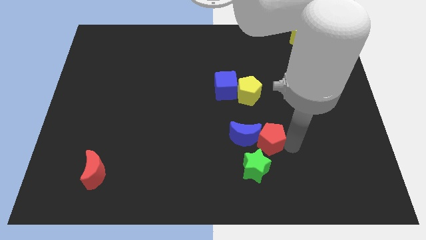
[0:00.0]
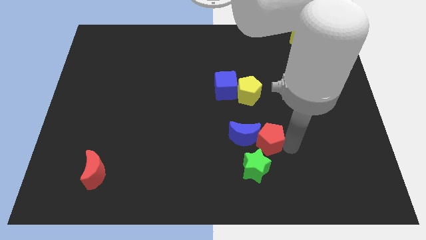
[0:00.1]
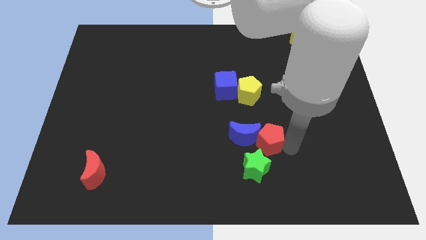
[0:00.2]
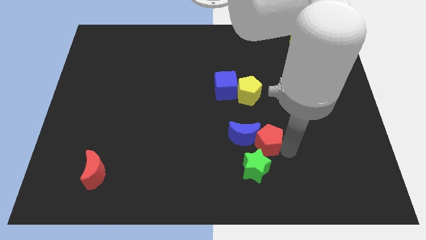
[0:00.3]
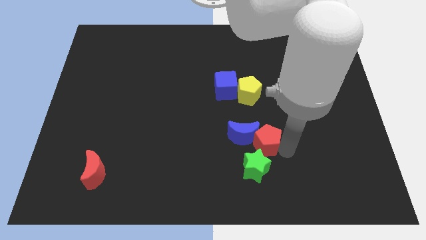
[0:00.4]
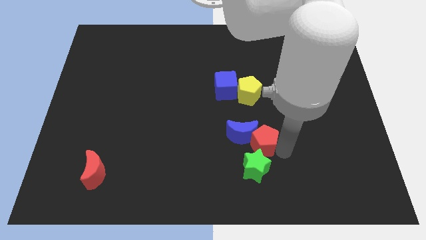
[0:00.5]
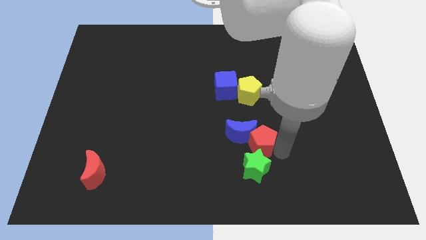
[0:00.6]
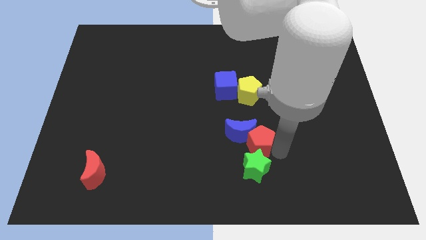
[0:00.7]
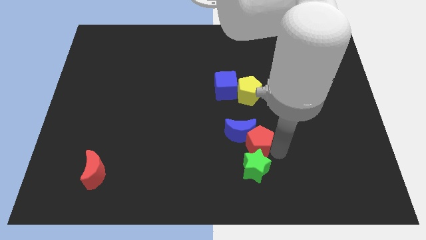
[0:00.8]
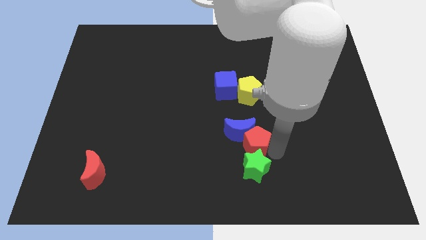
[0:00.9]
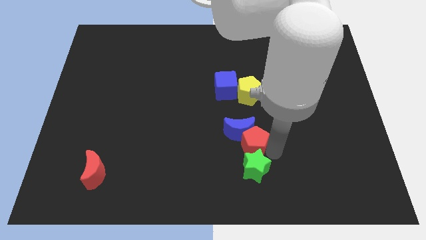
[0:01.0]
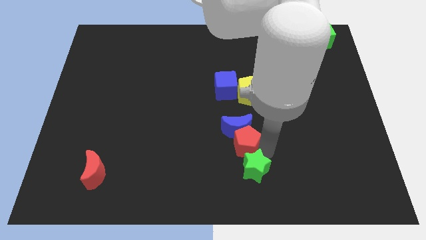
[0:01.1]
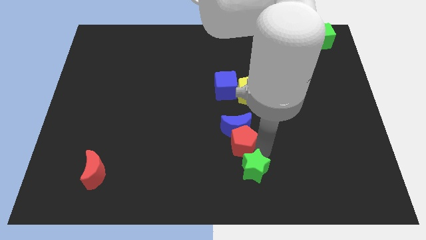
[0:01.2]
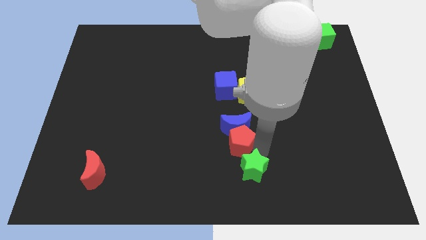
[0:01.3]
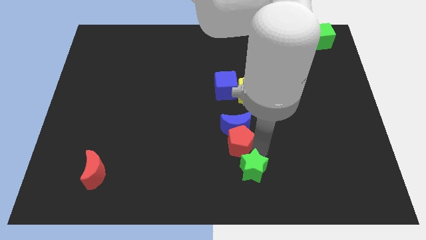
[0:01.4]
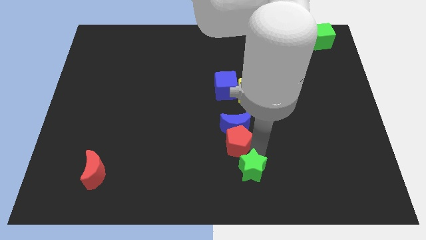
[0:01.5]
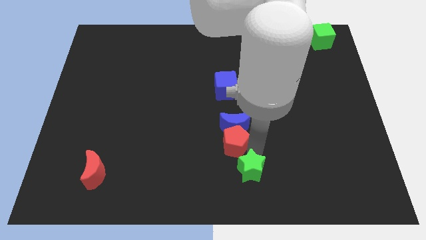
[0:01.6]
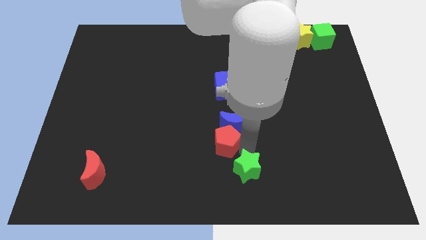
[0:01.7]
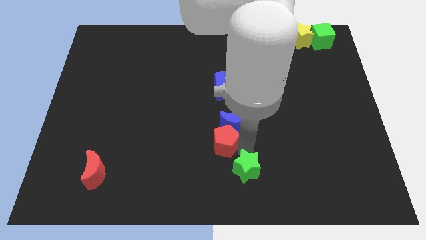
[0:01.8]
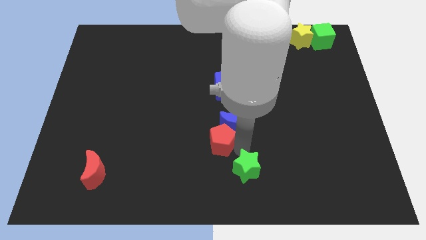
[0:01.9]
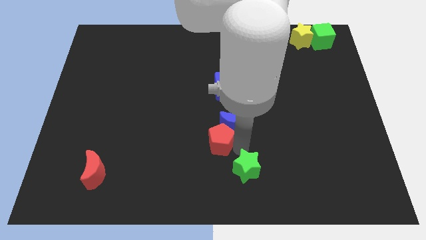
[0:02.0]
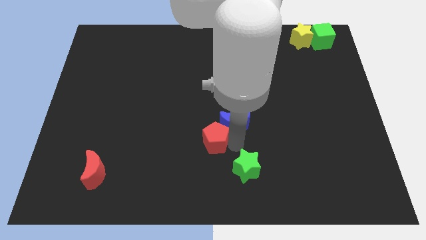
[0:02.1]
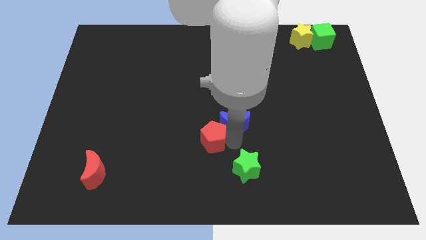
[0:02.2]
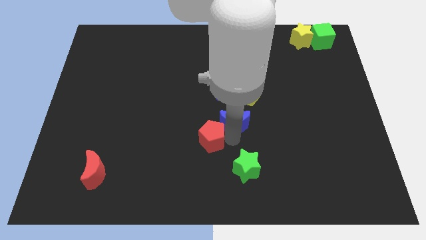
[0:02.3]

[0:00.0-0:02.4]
slide the red pentagon to the bottom left side of the blue moon

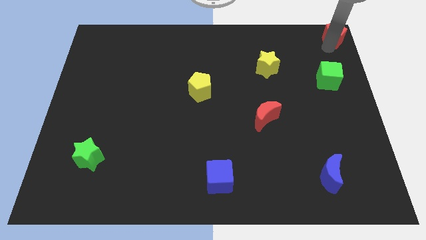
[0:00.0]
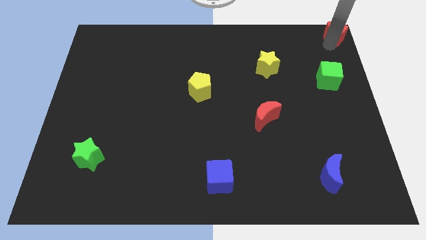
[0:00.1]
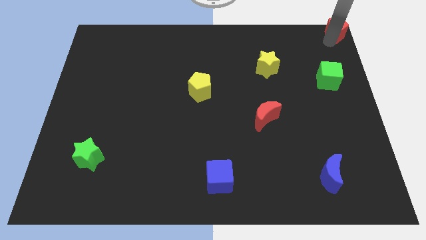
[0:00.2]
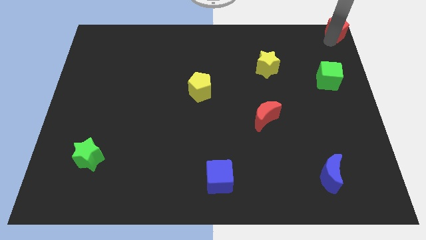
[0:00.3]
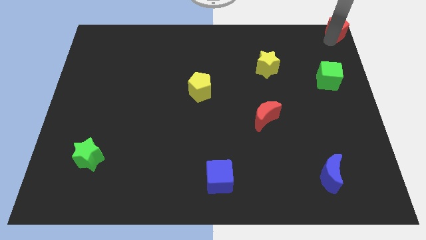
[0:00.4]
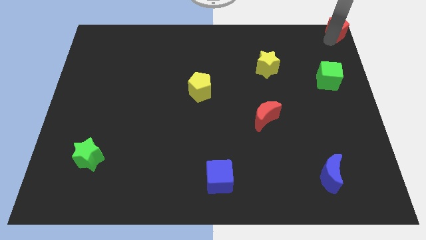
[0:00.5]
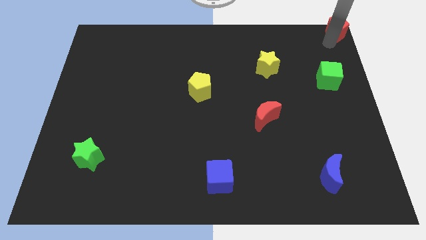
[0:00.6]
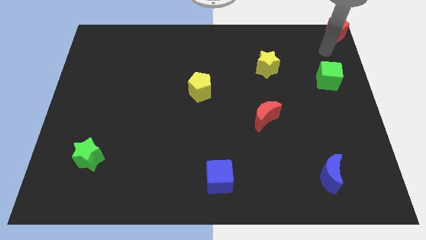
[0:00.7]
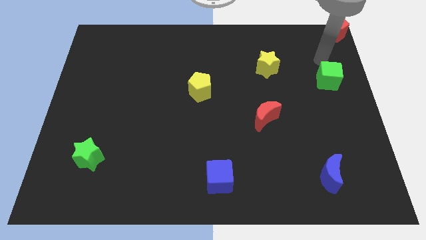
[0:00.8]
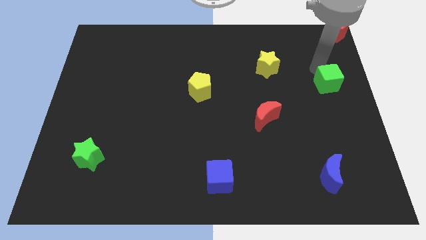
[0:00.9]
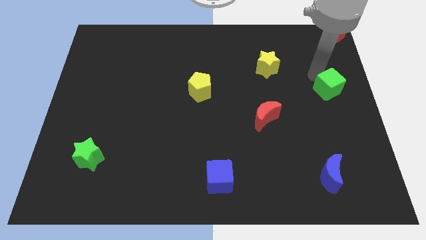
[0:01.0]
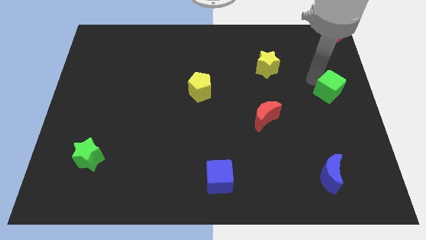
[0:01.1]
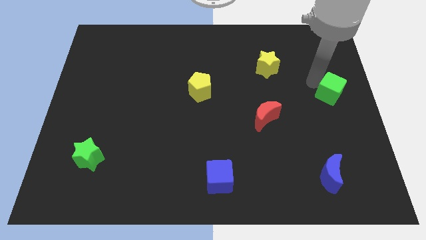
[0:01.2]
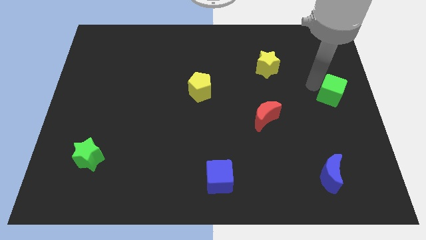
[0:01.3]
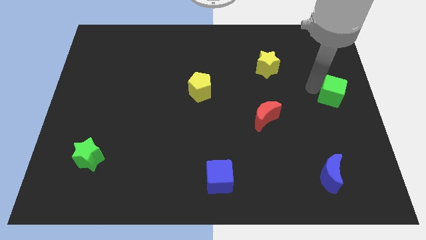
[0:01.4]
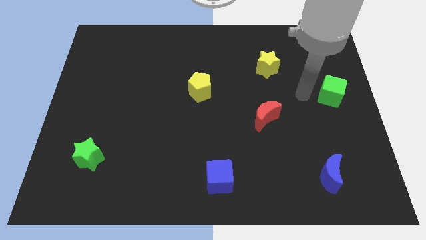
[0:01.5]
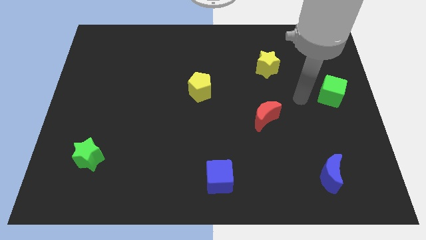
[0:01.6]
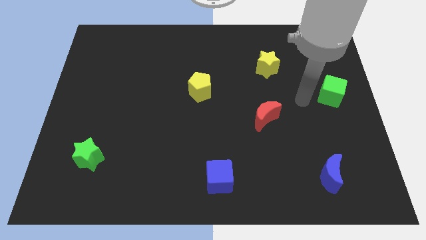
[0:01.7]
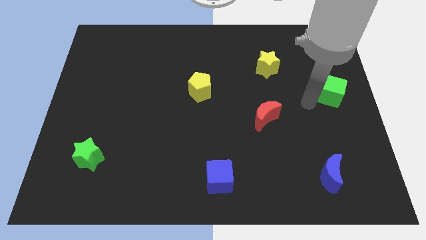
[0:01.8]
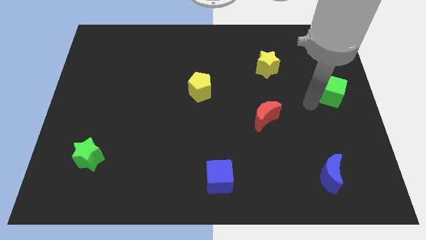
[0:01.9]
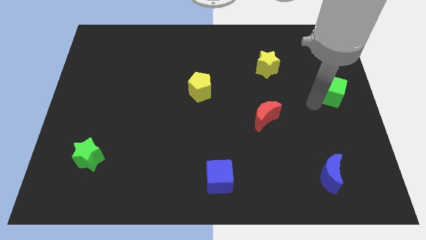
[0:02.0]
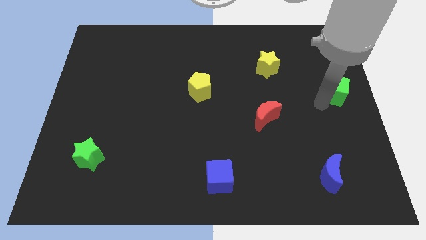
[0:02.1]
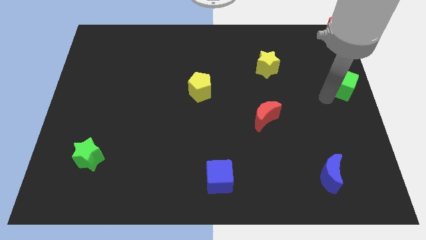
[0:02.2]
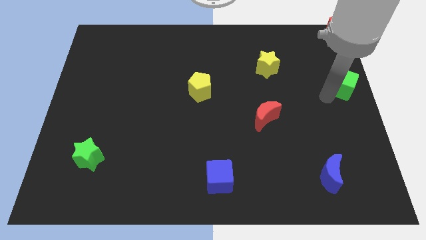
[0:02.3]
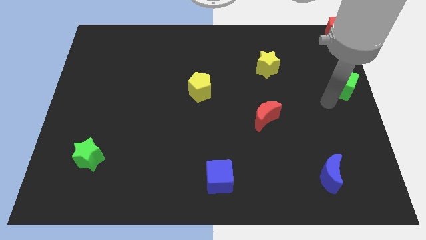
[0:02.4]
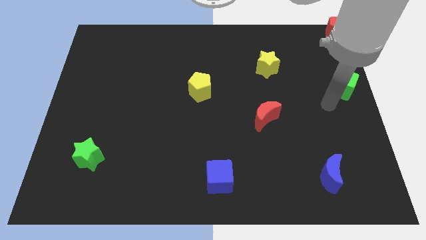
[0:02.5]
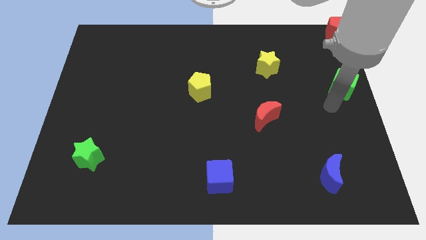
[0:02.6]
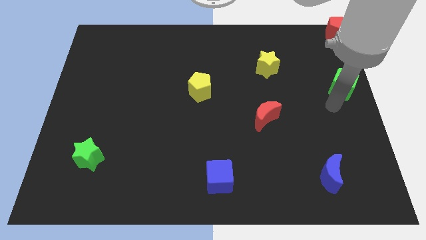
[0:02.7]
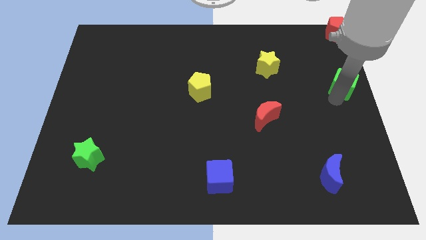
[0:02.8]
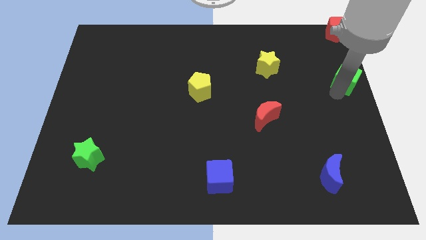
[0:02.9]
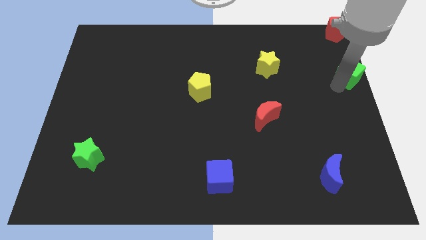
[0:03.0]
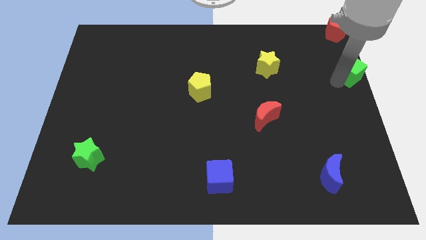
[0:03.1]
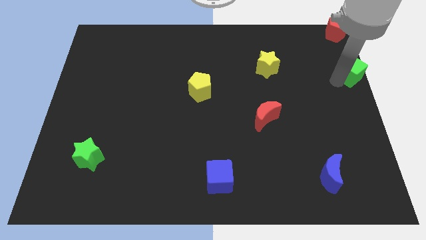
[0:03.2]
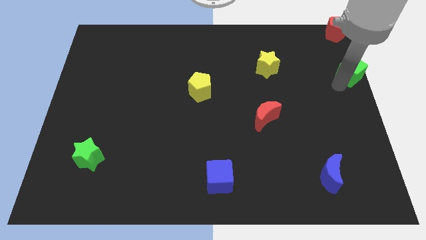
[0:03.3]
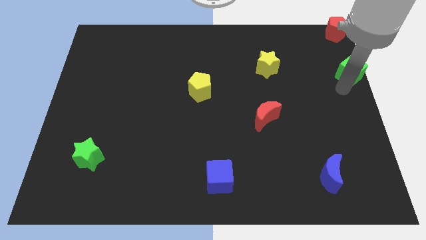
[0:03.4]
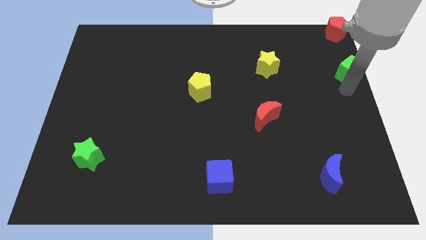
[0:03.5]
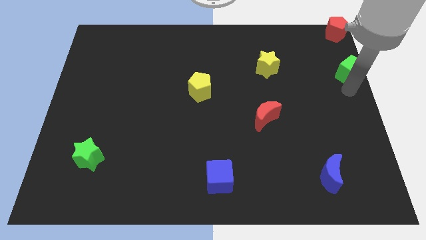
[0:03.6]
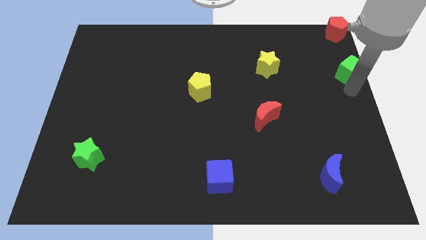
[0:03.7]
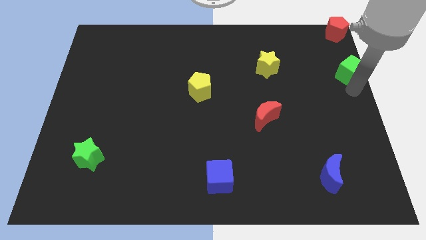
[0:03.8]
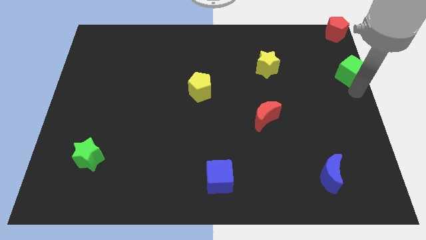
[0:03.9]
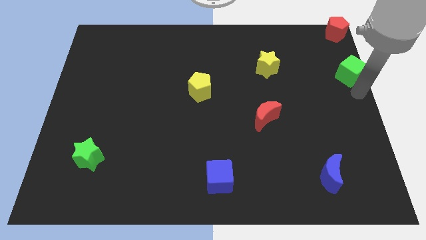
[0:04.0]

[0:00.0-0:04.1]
place green cube below red pentagon

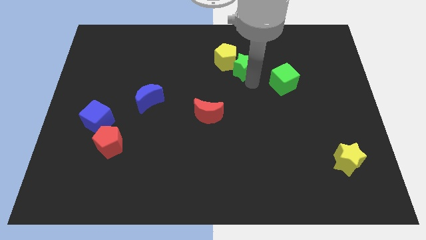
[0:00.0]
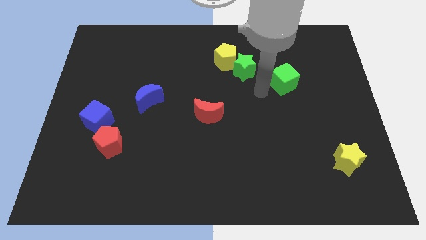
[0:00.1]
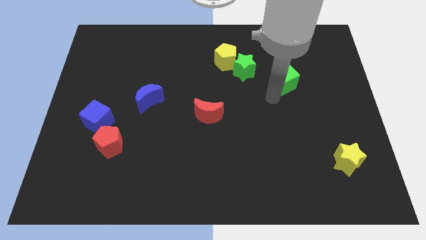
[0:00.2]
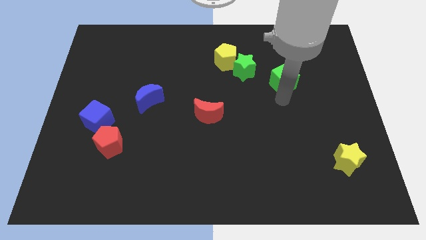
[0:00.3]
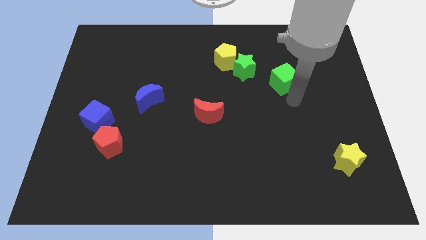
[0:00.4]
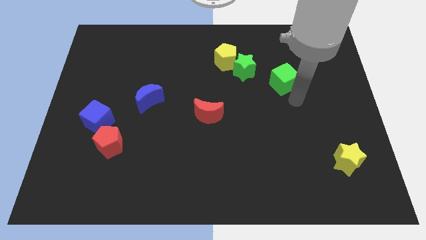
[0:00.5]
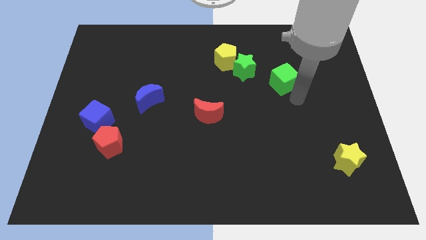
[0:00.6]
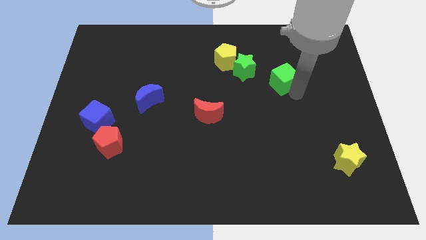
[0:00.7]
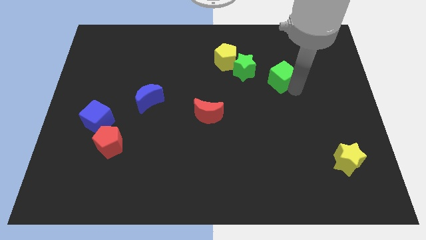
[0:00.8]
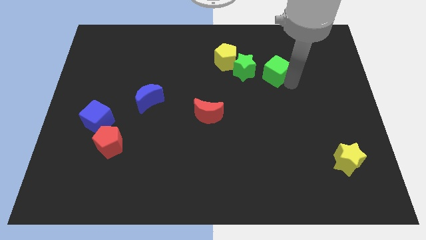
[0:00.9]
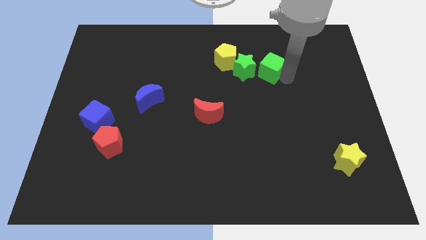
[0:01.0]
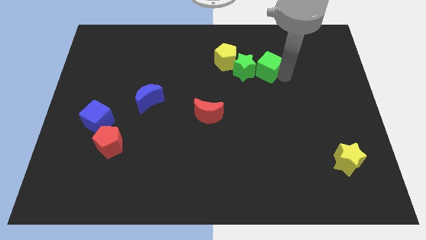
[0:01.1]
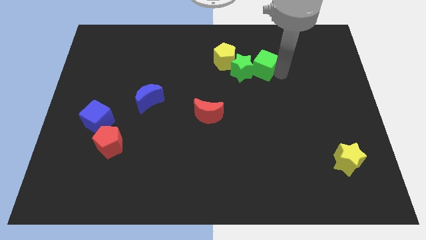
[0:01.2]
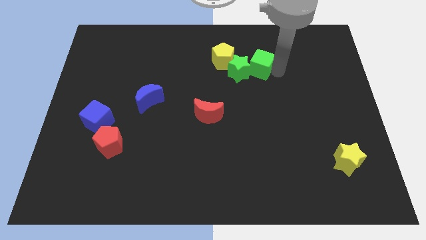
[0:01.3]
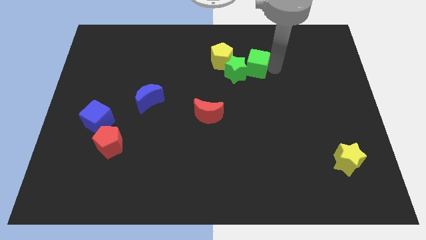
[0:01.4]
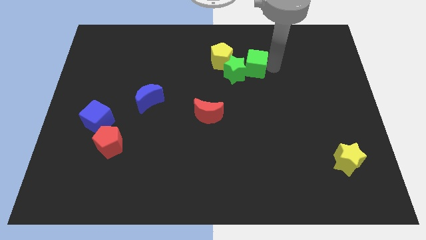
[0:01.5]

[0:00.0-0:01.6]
push the green cube into the green star

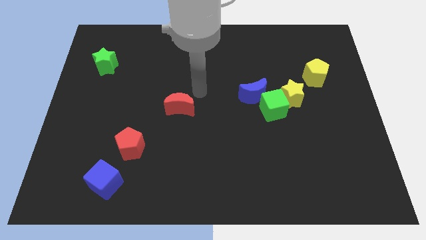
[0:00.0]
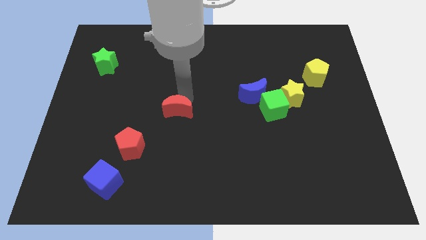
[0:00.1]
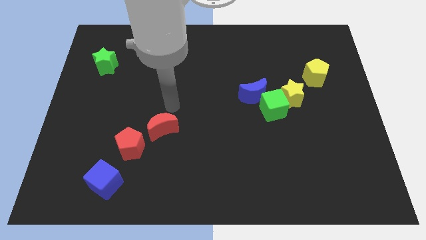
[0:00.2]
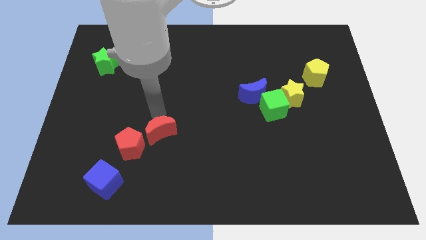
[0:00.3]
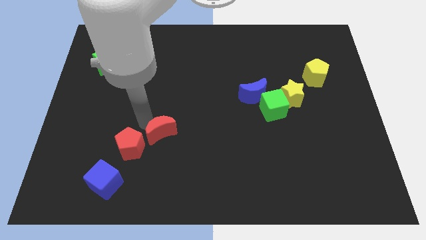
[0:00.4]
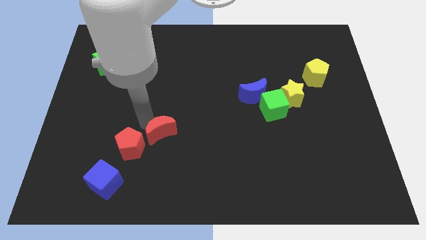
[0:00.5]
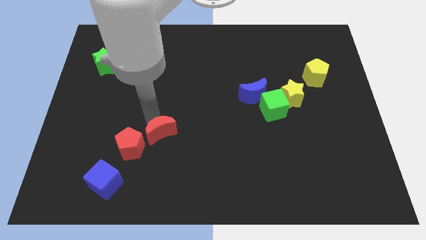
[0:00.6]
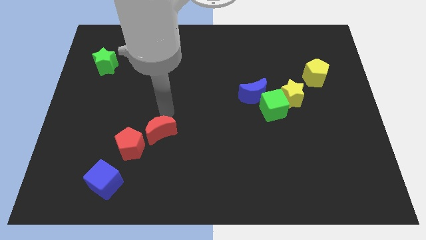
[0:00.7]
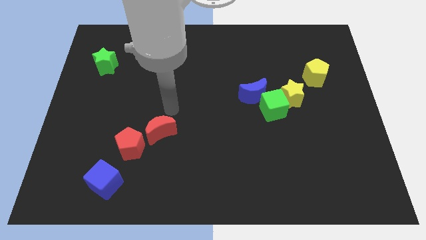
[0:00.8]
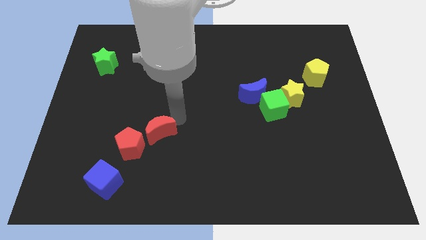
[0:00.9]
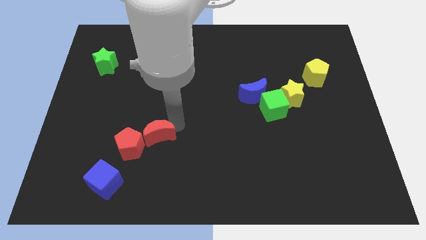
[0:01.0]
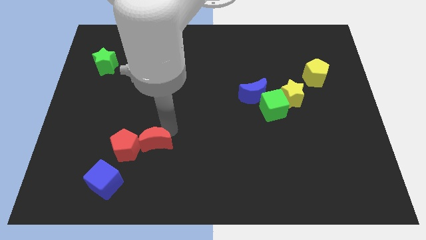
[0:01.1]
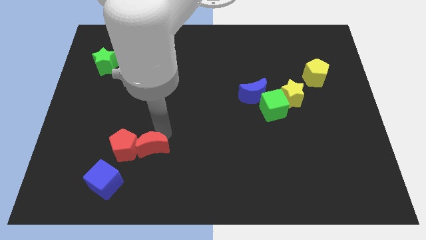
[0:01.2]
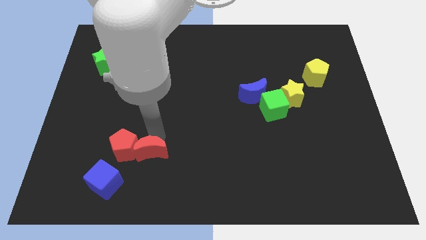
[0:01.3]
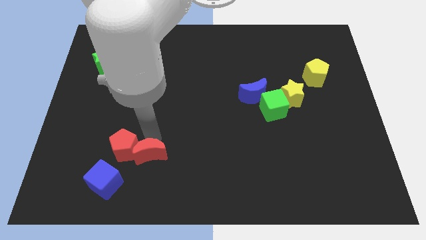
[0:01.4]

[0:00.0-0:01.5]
place red moon to the left of red pentagon
